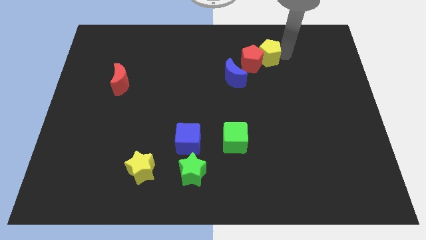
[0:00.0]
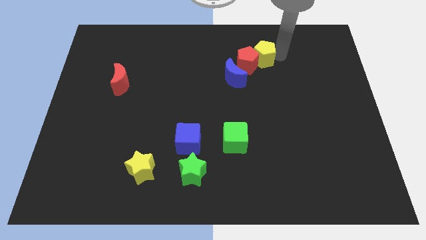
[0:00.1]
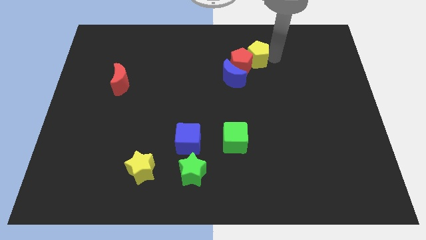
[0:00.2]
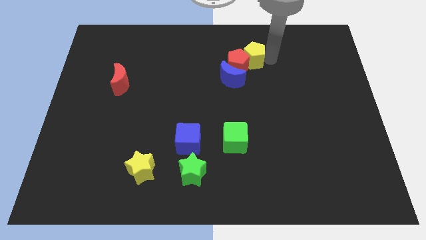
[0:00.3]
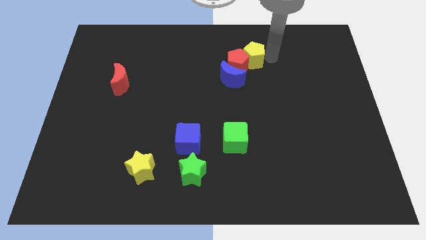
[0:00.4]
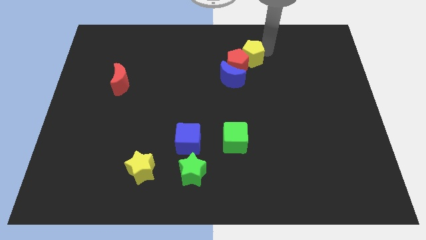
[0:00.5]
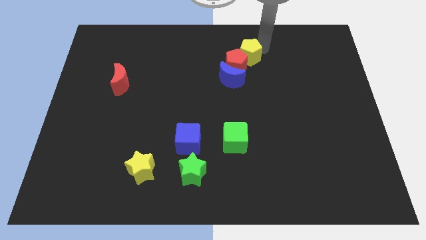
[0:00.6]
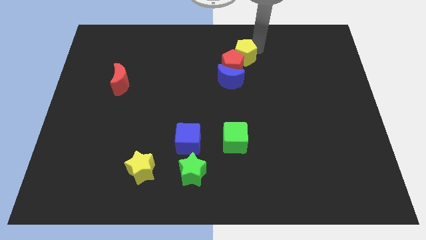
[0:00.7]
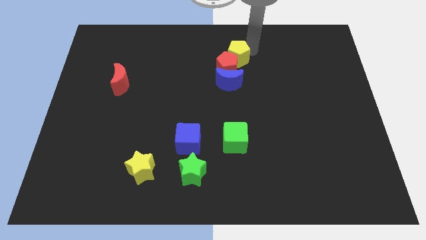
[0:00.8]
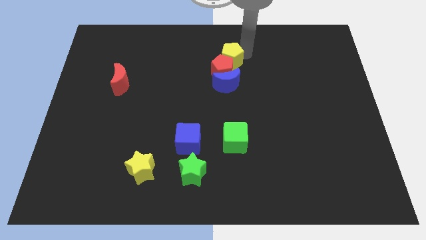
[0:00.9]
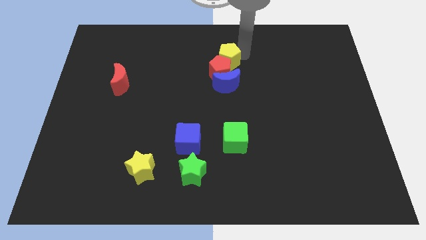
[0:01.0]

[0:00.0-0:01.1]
slide yellow pentagon into red pentagon

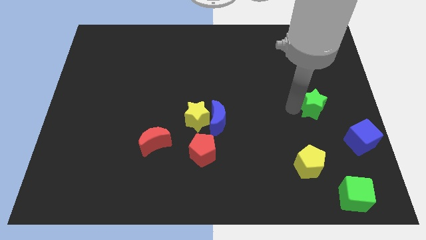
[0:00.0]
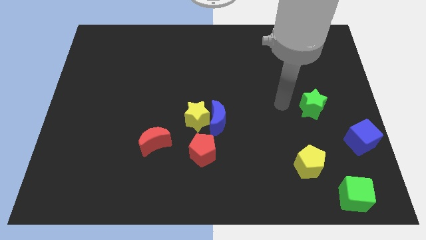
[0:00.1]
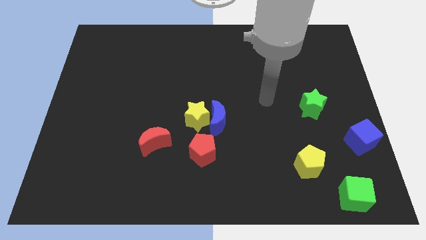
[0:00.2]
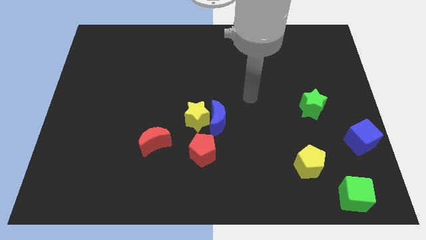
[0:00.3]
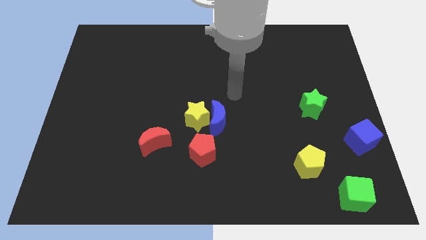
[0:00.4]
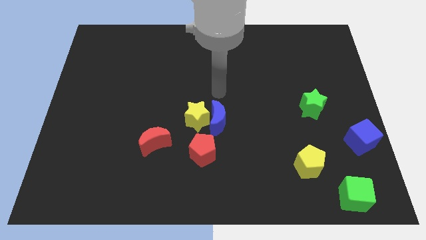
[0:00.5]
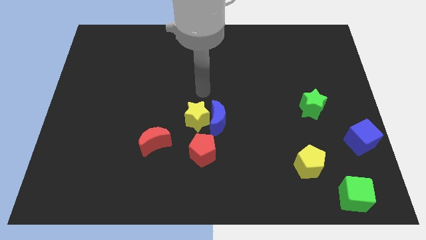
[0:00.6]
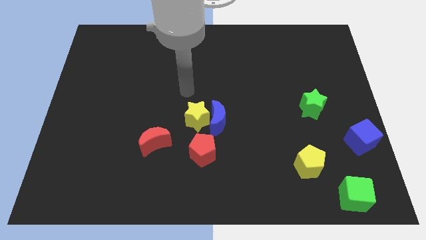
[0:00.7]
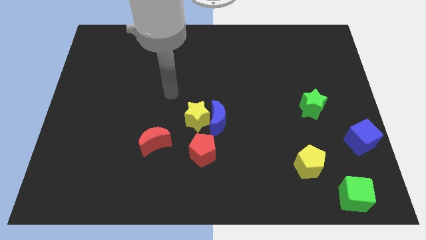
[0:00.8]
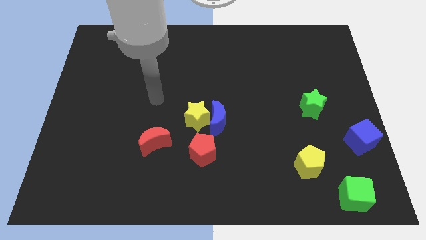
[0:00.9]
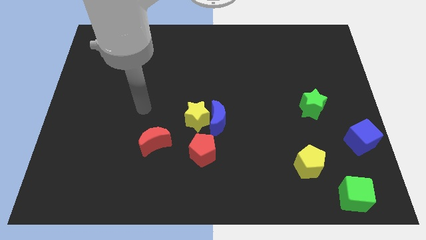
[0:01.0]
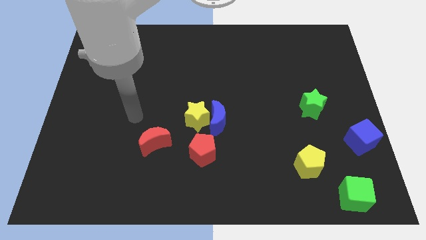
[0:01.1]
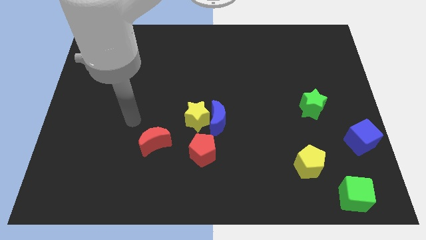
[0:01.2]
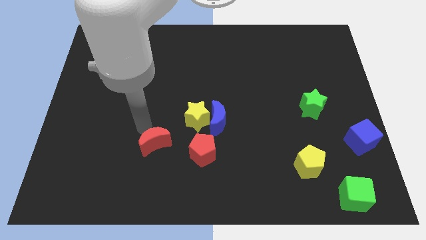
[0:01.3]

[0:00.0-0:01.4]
move your arm towards red crescent

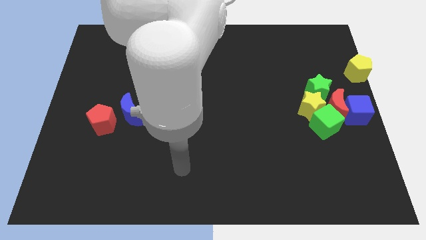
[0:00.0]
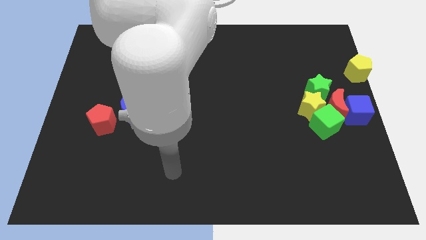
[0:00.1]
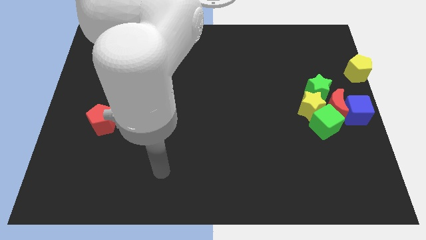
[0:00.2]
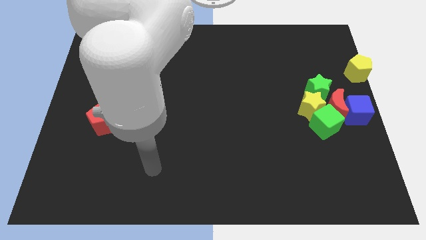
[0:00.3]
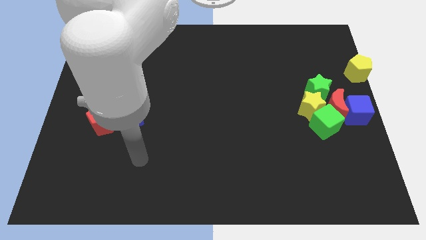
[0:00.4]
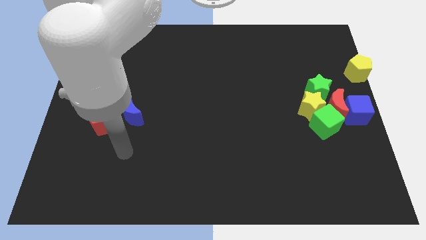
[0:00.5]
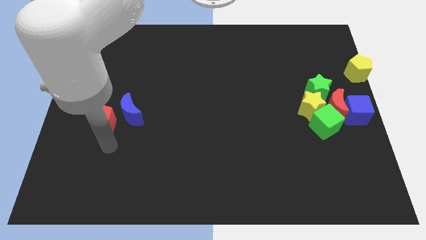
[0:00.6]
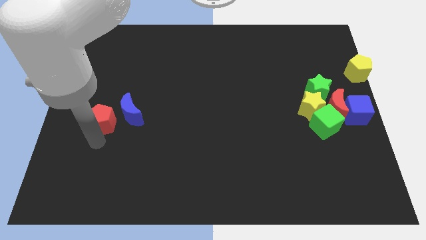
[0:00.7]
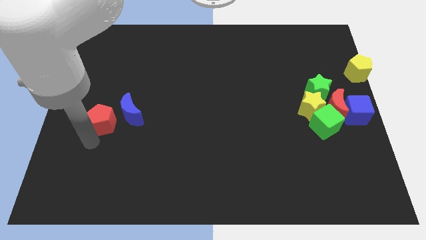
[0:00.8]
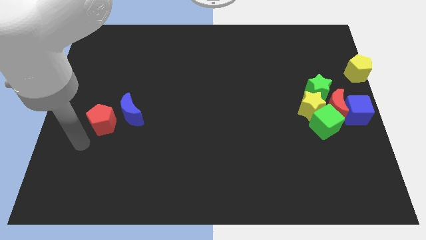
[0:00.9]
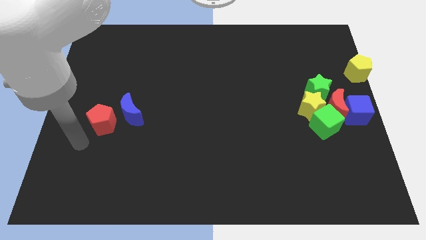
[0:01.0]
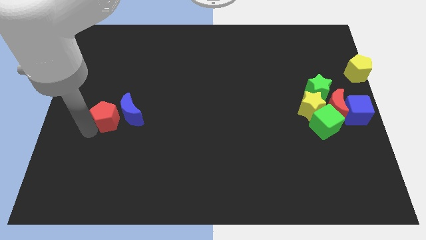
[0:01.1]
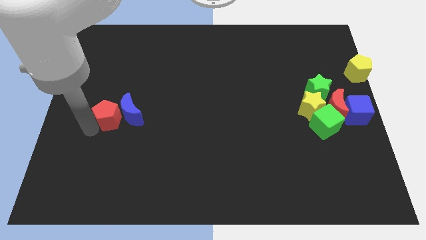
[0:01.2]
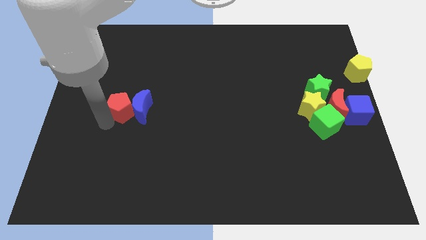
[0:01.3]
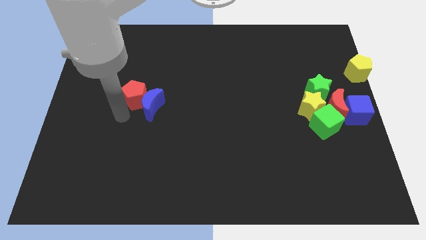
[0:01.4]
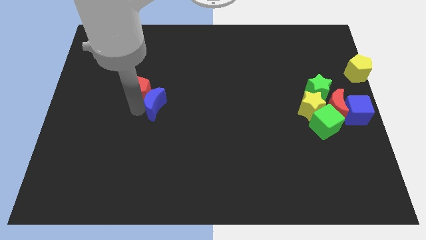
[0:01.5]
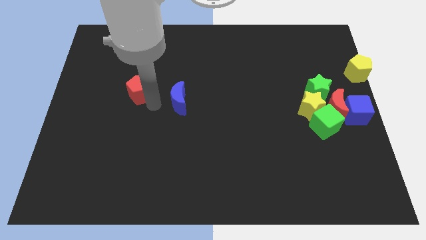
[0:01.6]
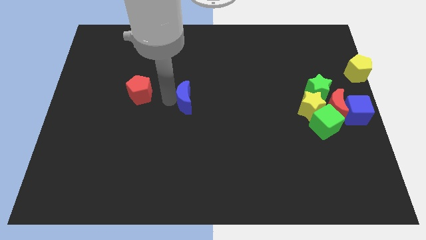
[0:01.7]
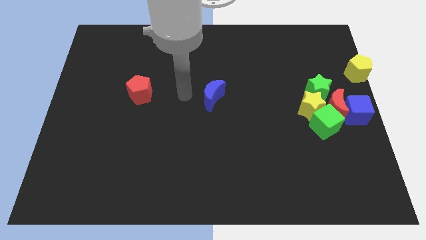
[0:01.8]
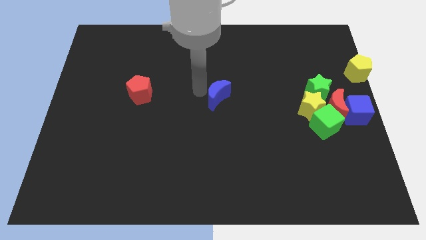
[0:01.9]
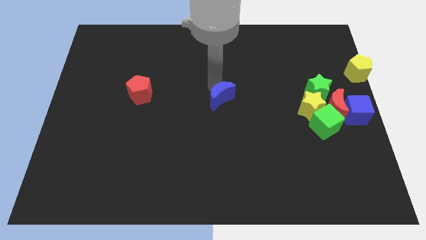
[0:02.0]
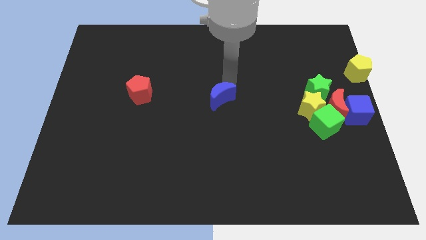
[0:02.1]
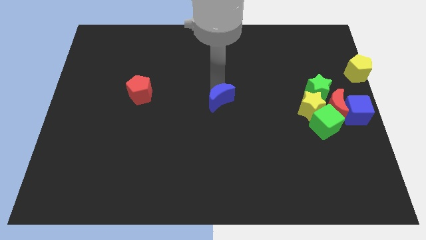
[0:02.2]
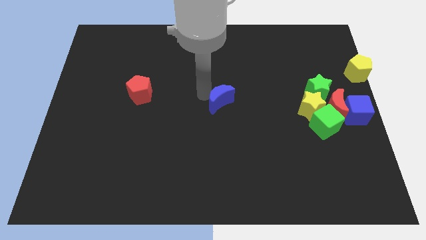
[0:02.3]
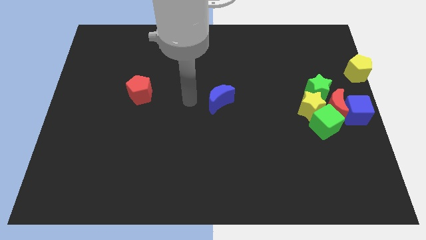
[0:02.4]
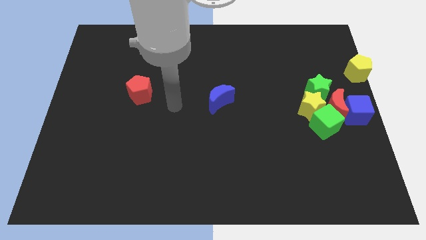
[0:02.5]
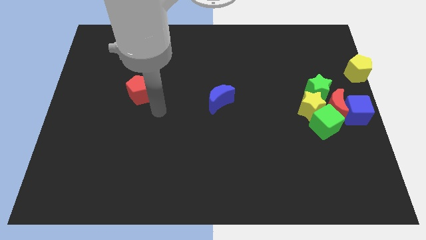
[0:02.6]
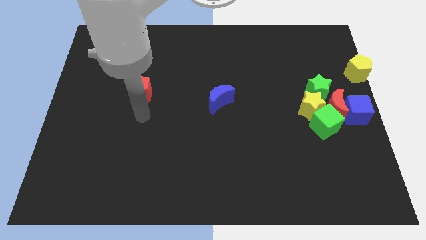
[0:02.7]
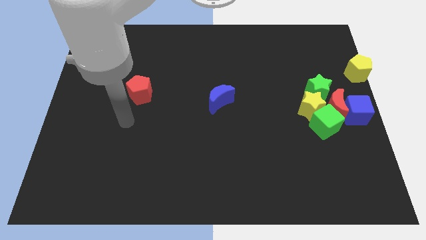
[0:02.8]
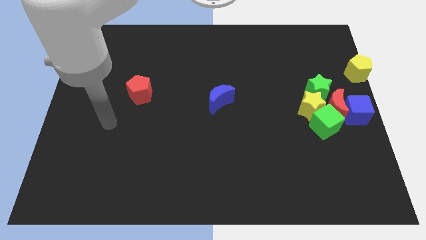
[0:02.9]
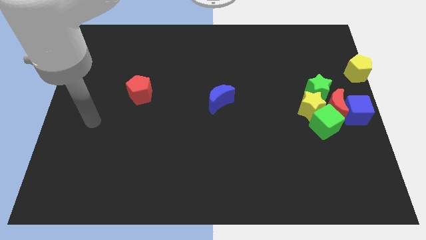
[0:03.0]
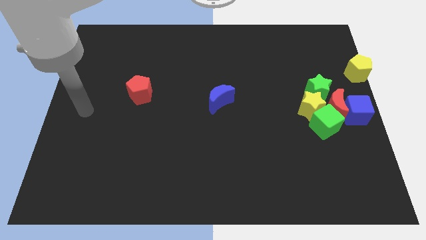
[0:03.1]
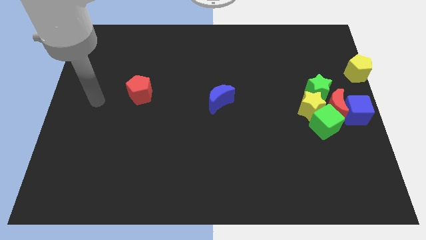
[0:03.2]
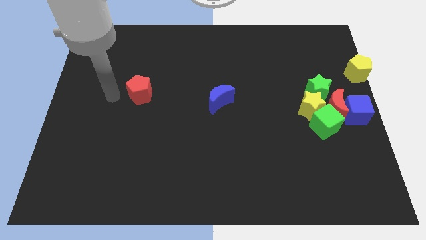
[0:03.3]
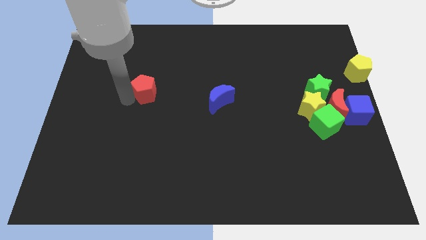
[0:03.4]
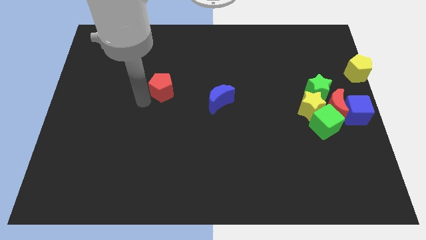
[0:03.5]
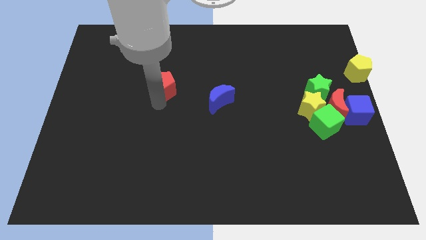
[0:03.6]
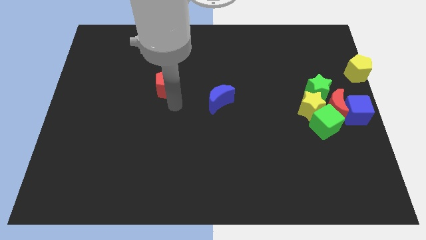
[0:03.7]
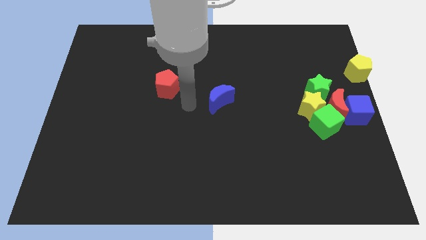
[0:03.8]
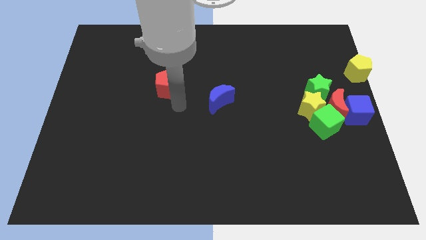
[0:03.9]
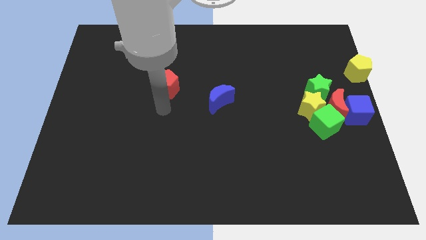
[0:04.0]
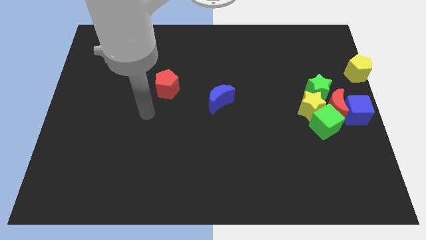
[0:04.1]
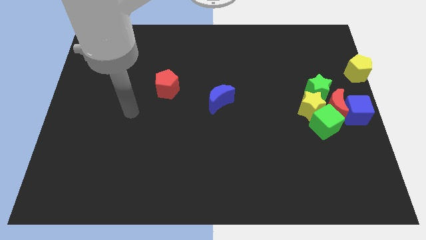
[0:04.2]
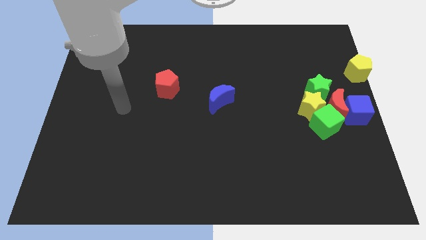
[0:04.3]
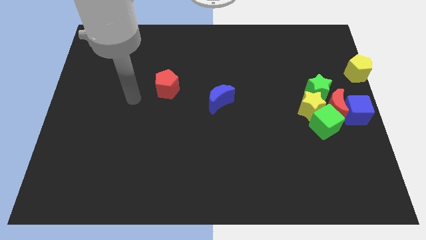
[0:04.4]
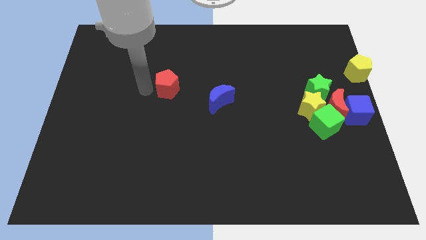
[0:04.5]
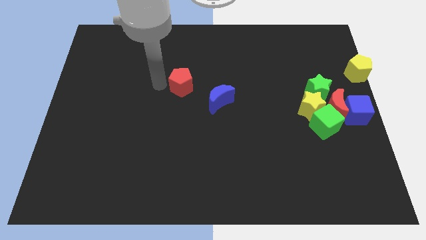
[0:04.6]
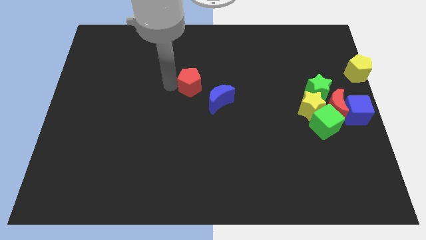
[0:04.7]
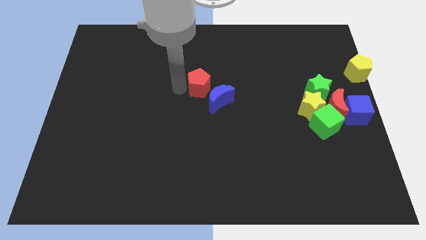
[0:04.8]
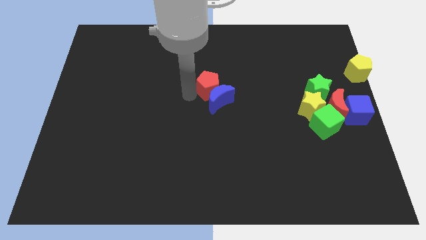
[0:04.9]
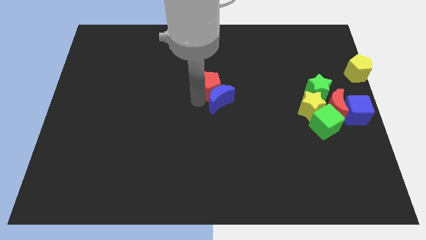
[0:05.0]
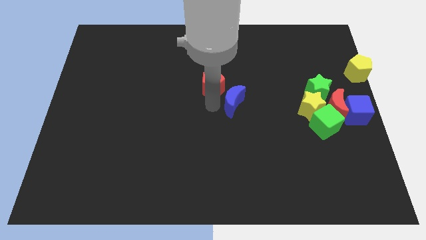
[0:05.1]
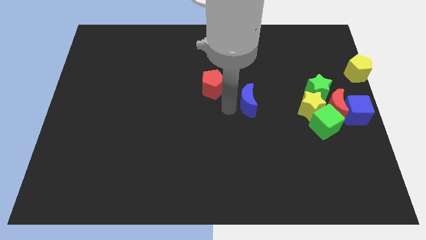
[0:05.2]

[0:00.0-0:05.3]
push the red pentagon into the blue moon

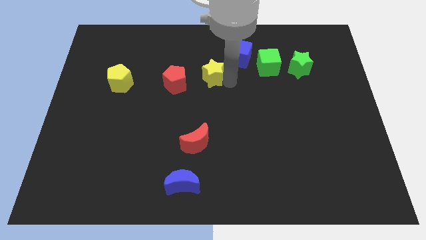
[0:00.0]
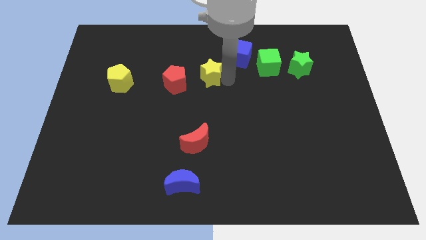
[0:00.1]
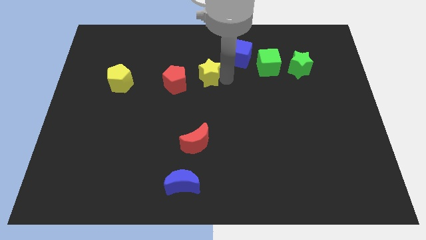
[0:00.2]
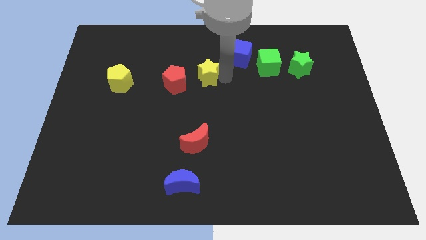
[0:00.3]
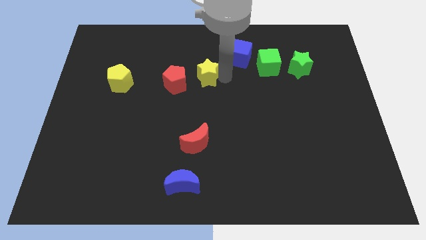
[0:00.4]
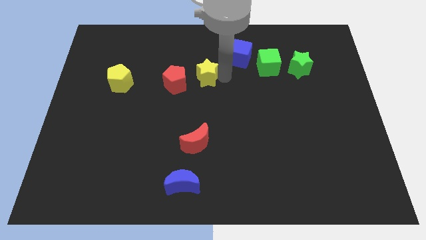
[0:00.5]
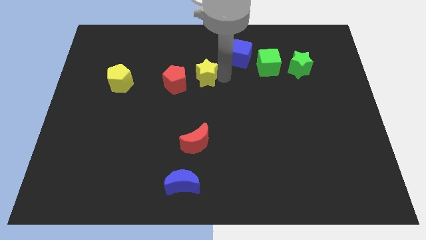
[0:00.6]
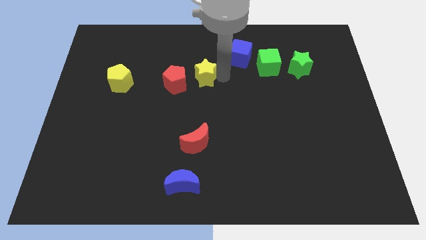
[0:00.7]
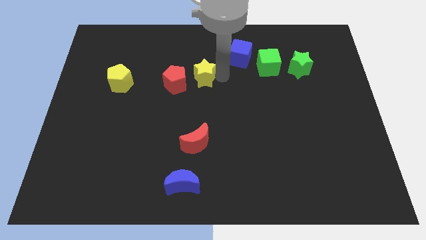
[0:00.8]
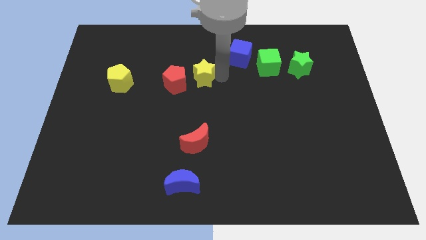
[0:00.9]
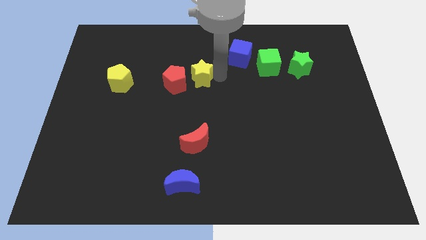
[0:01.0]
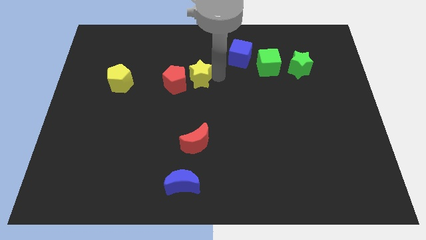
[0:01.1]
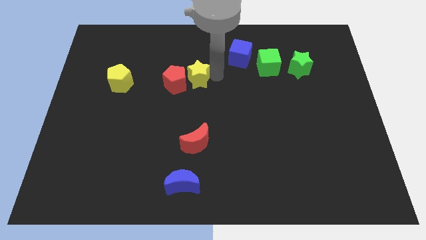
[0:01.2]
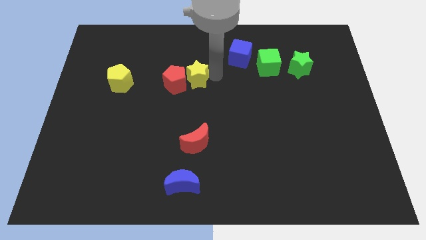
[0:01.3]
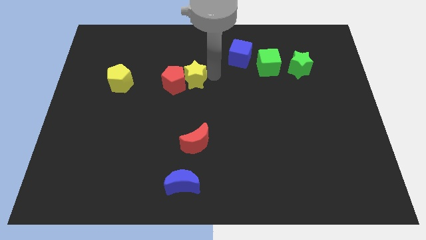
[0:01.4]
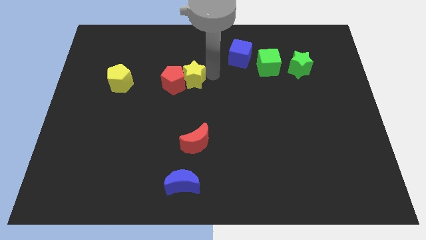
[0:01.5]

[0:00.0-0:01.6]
move the yellow star close to the red pentagon
